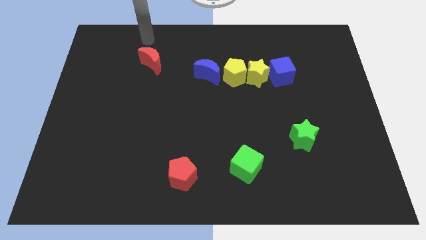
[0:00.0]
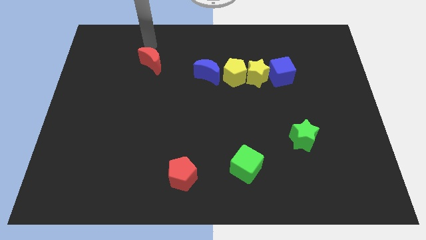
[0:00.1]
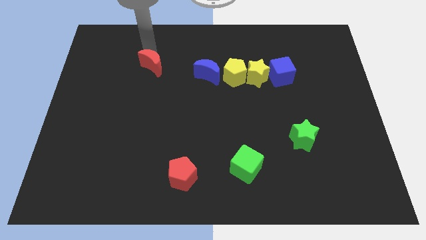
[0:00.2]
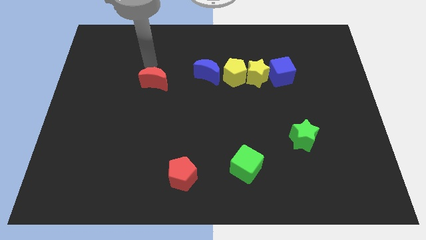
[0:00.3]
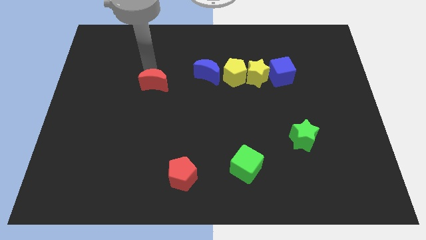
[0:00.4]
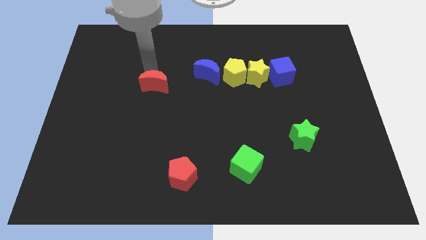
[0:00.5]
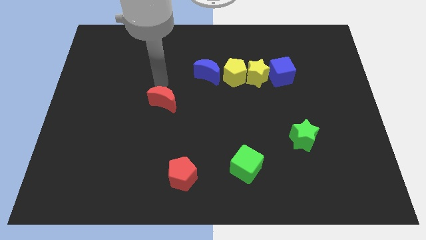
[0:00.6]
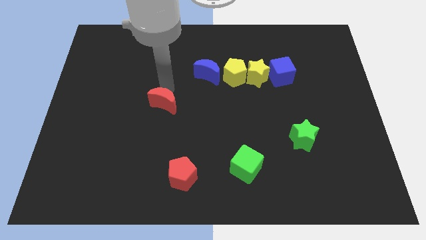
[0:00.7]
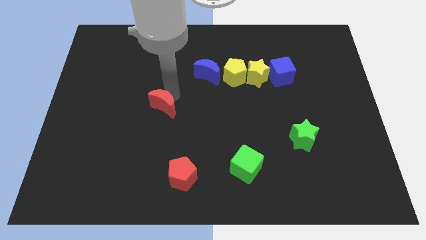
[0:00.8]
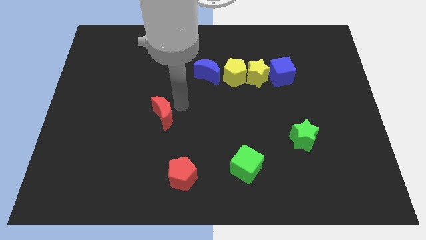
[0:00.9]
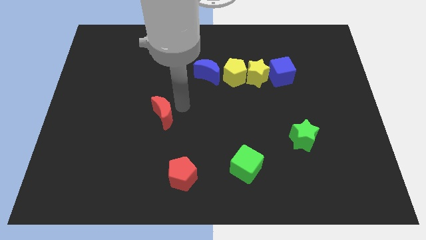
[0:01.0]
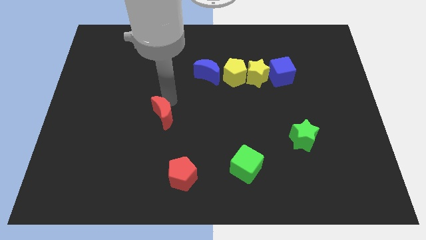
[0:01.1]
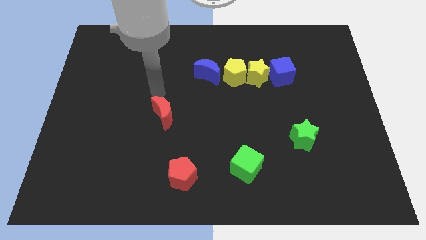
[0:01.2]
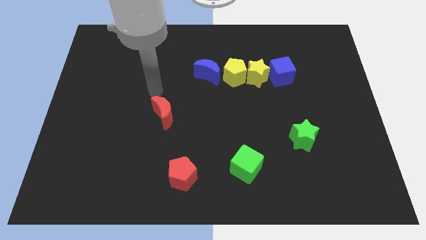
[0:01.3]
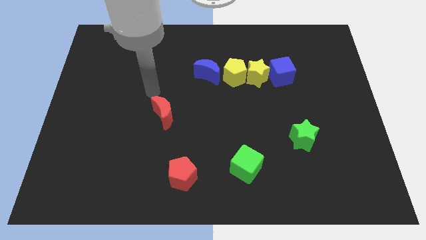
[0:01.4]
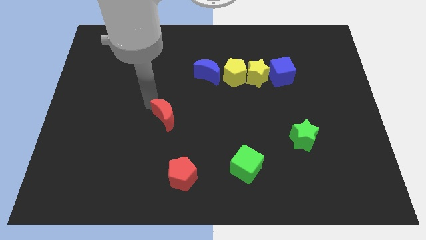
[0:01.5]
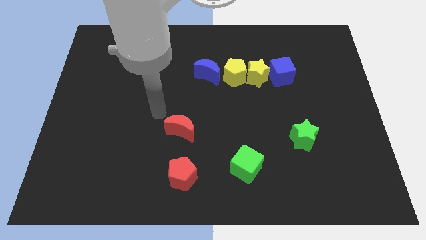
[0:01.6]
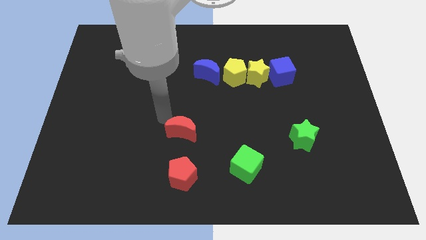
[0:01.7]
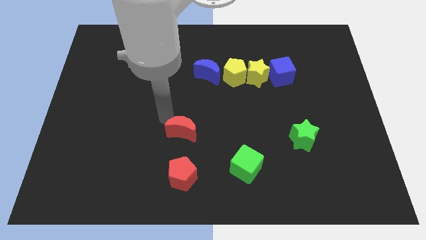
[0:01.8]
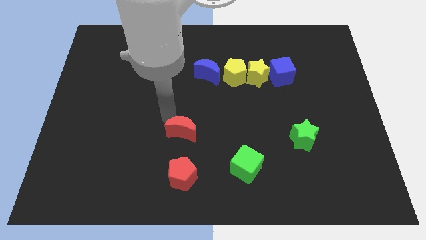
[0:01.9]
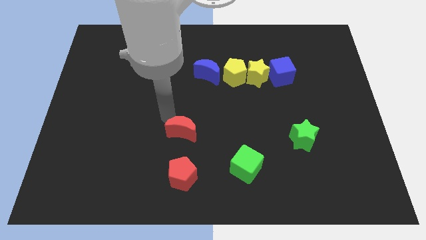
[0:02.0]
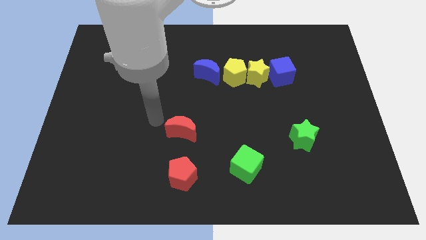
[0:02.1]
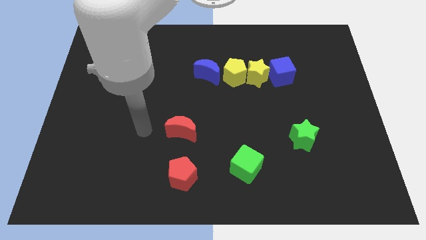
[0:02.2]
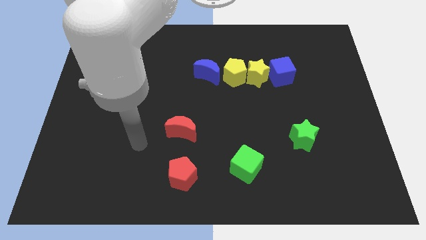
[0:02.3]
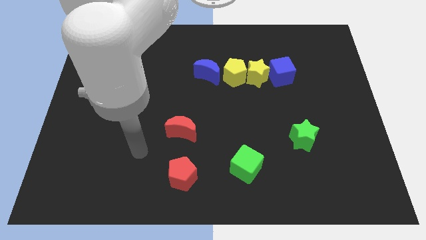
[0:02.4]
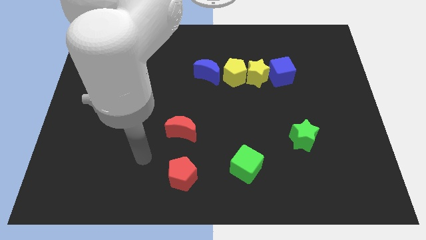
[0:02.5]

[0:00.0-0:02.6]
put the red crescent above the red pentagon

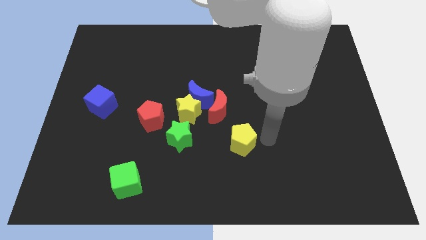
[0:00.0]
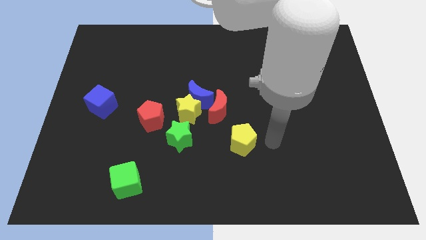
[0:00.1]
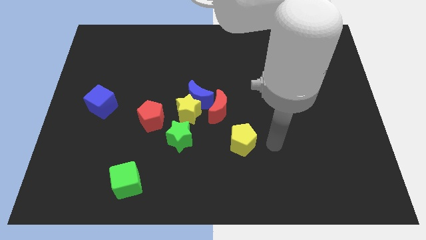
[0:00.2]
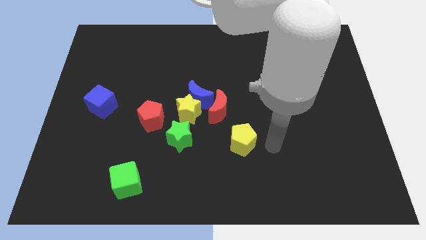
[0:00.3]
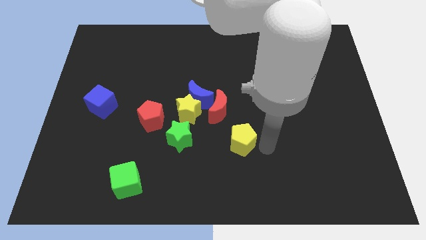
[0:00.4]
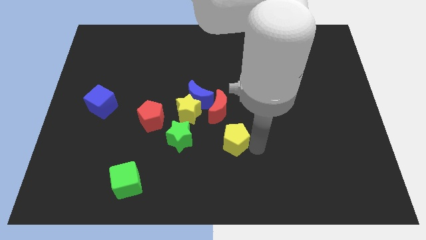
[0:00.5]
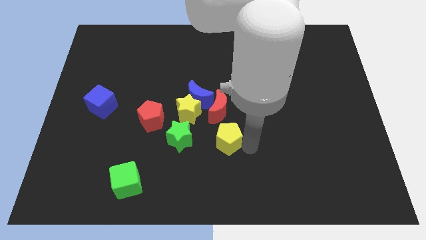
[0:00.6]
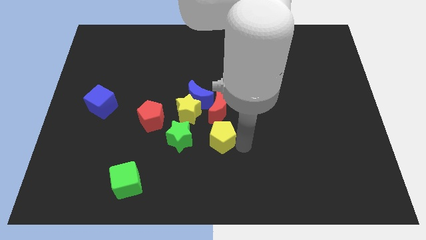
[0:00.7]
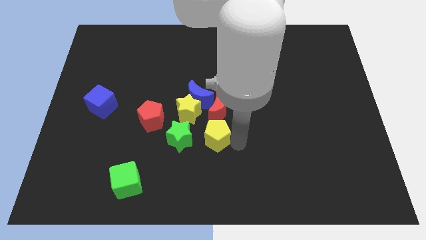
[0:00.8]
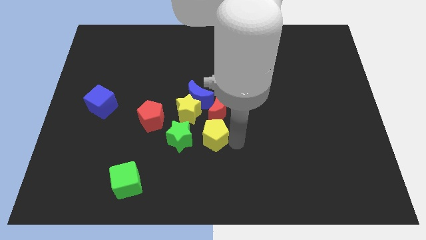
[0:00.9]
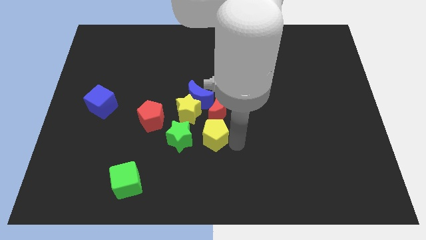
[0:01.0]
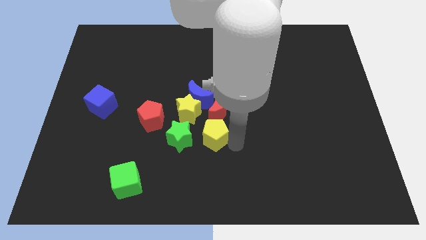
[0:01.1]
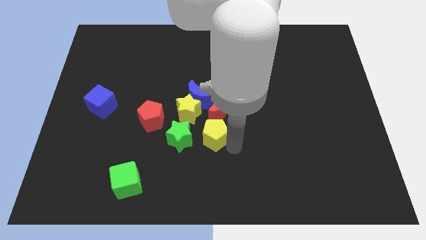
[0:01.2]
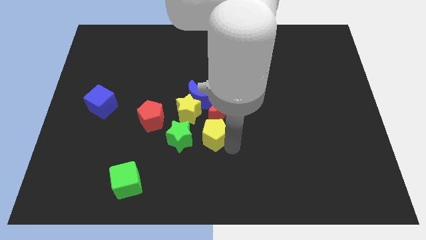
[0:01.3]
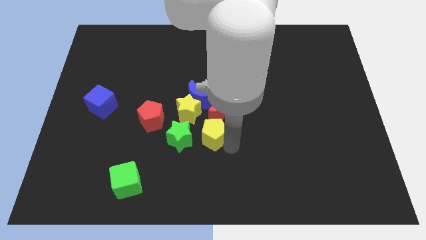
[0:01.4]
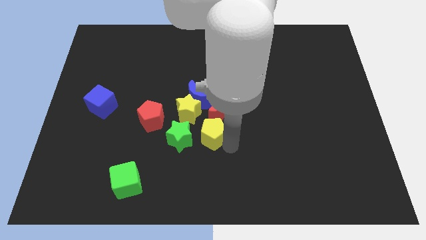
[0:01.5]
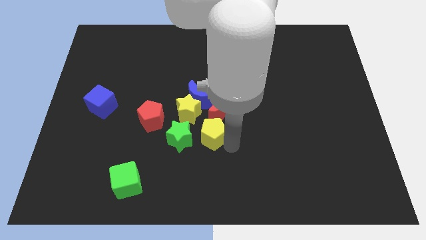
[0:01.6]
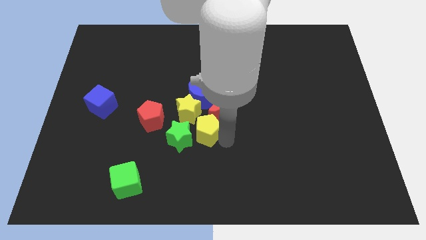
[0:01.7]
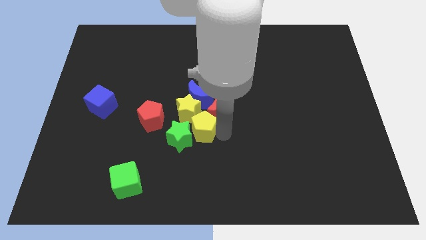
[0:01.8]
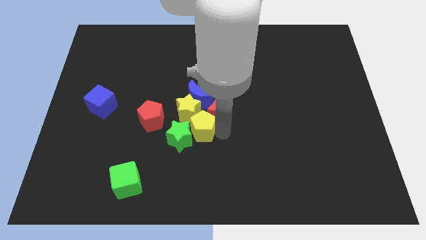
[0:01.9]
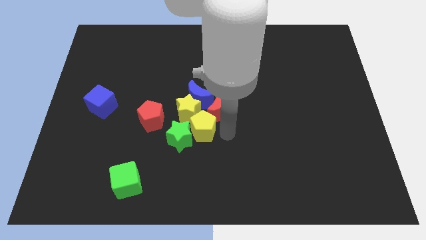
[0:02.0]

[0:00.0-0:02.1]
place the yellow pentagon into the yellow and green star at the center

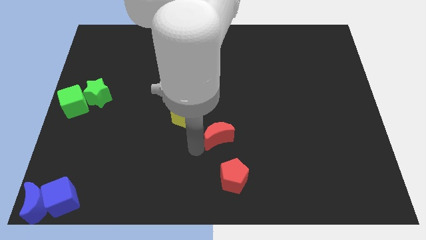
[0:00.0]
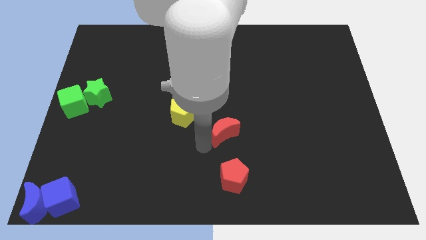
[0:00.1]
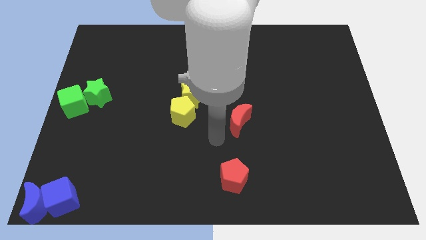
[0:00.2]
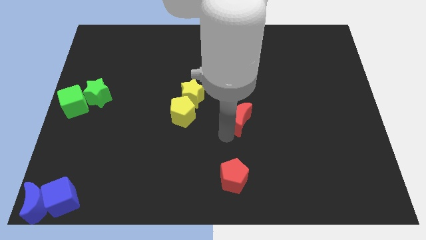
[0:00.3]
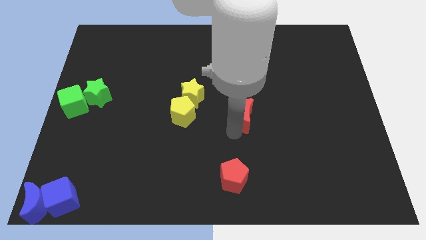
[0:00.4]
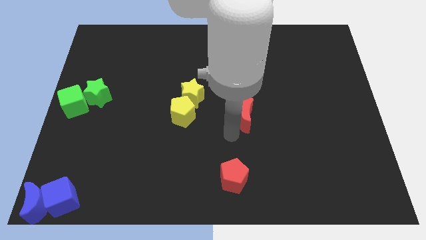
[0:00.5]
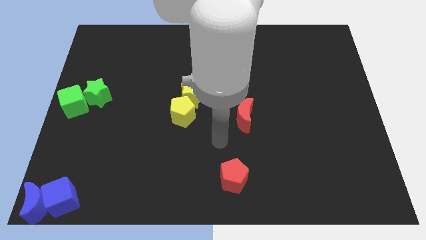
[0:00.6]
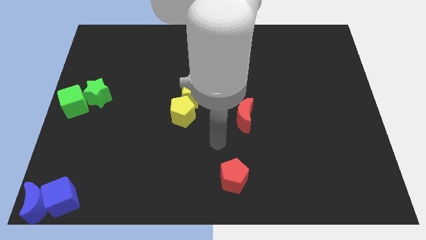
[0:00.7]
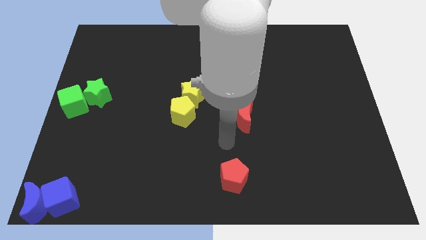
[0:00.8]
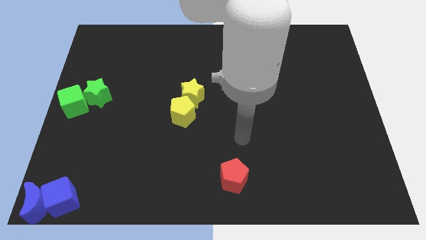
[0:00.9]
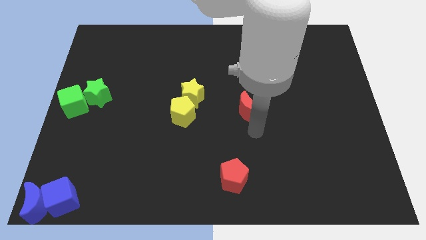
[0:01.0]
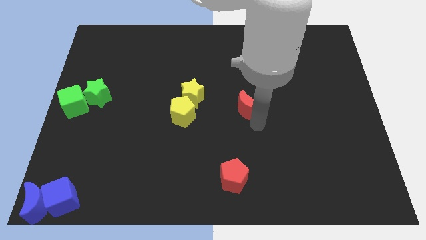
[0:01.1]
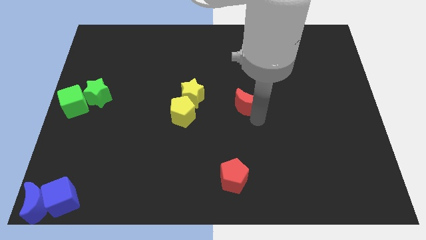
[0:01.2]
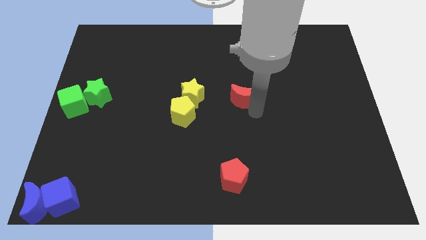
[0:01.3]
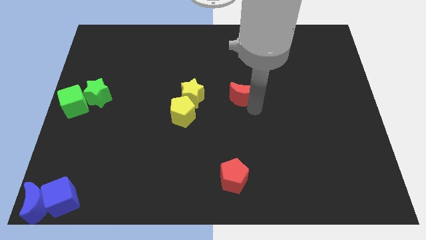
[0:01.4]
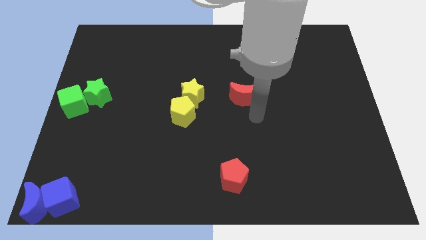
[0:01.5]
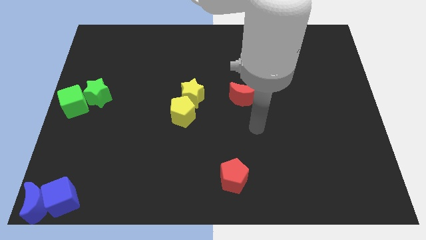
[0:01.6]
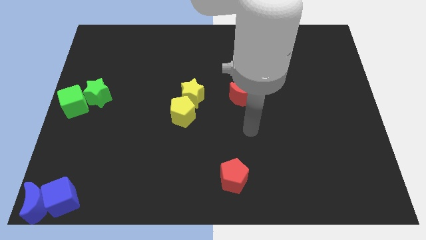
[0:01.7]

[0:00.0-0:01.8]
move the red crescent to the right of the yellow star

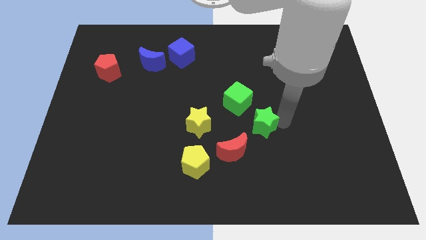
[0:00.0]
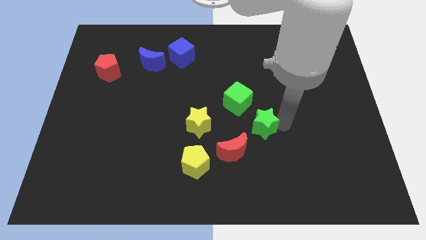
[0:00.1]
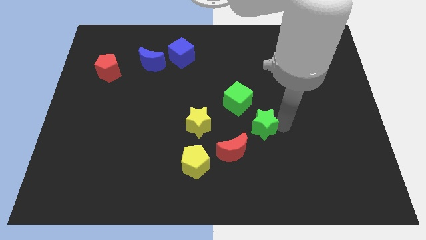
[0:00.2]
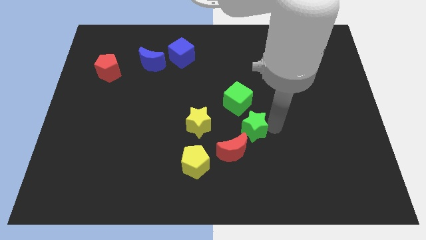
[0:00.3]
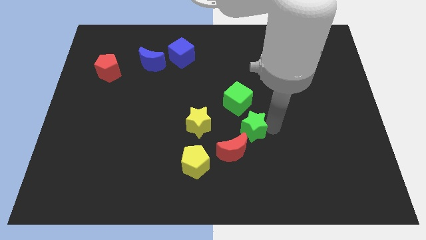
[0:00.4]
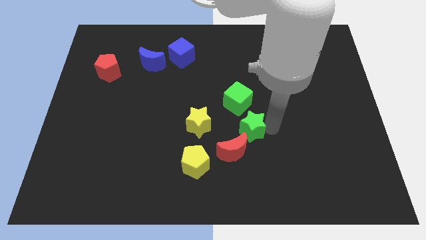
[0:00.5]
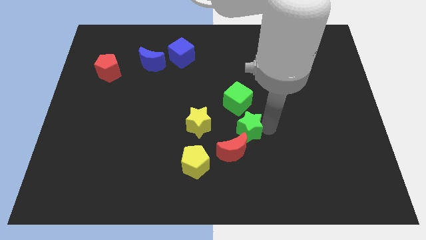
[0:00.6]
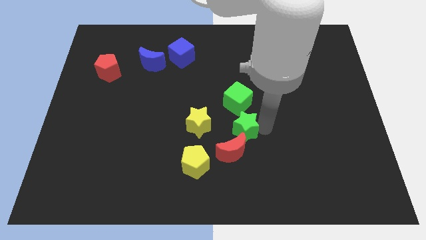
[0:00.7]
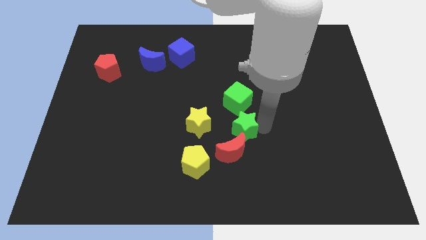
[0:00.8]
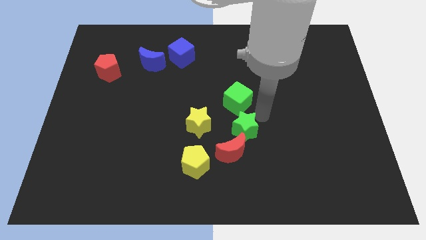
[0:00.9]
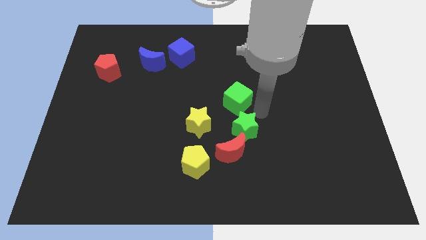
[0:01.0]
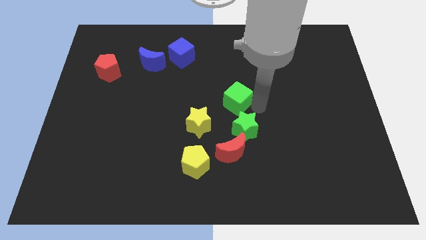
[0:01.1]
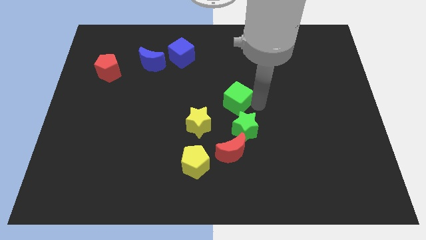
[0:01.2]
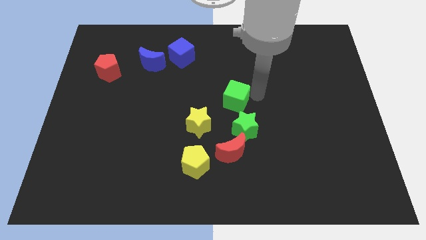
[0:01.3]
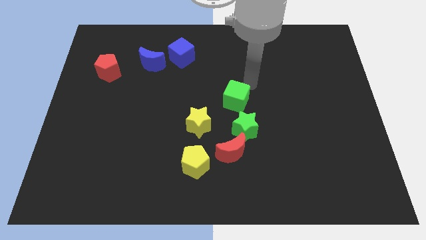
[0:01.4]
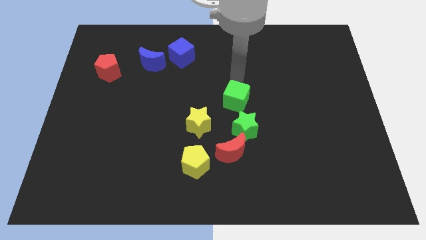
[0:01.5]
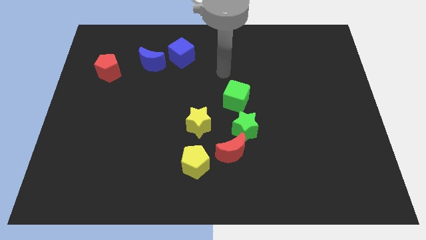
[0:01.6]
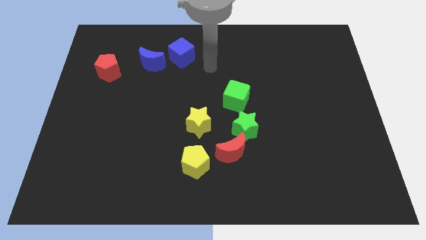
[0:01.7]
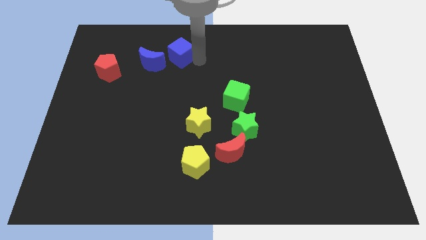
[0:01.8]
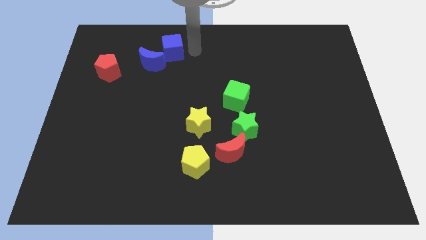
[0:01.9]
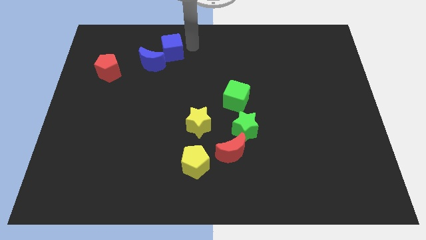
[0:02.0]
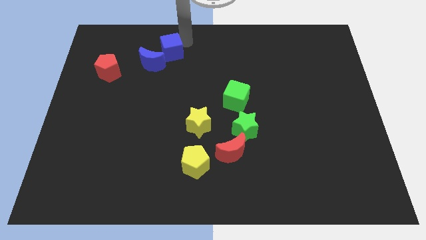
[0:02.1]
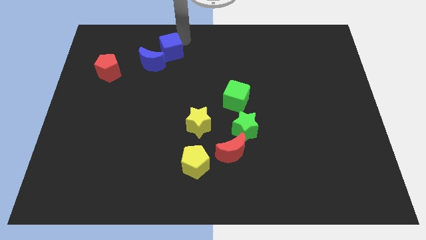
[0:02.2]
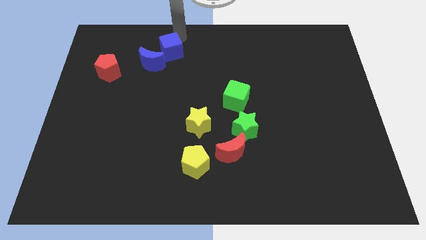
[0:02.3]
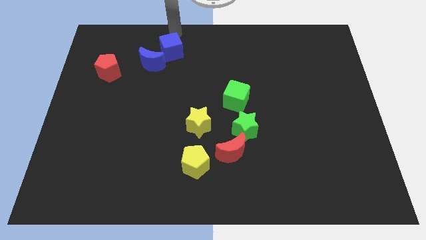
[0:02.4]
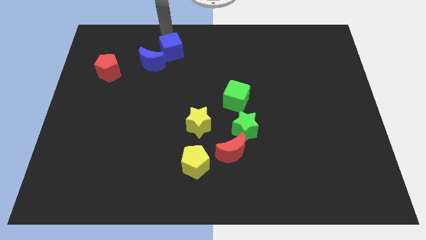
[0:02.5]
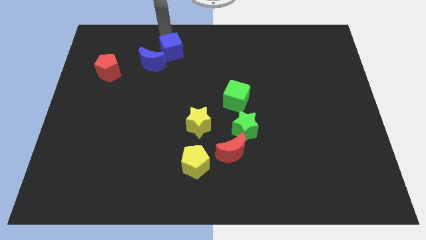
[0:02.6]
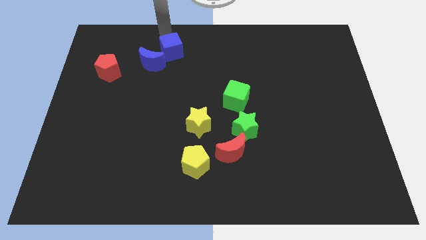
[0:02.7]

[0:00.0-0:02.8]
place the arm above the blue cube
